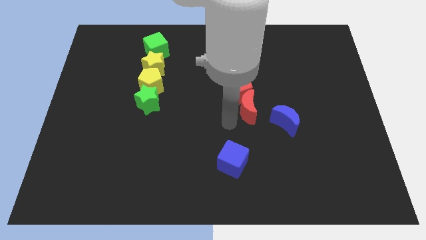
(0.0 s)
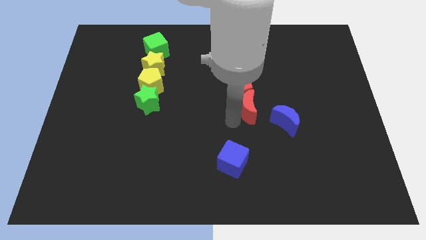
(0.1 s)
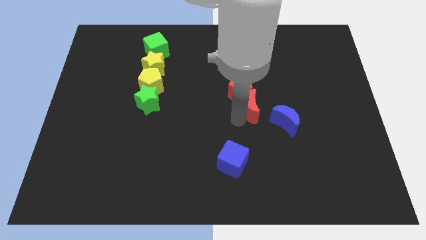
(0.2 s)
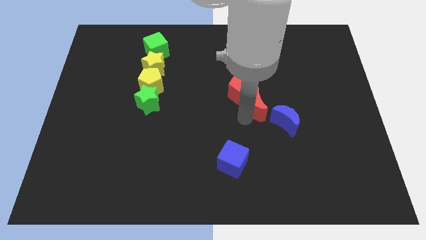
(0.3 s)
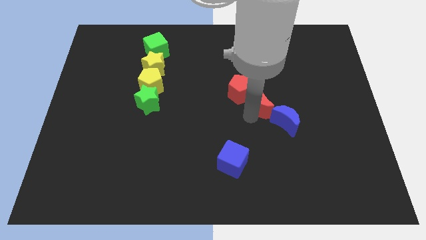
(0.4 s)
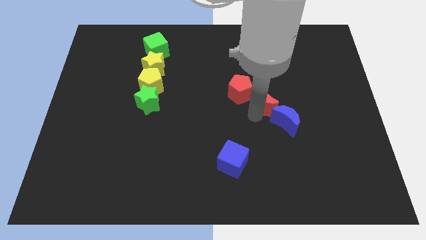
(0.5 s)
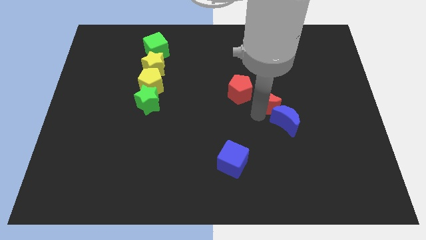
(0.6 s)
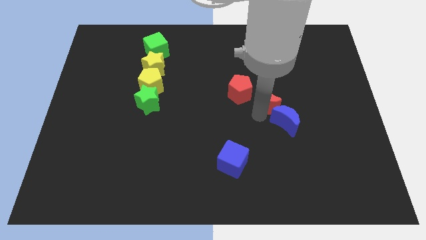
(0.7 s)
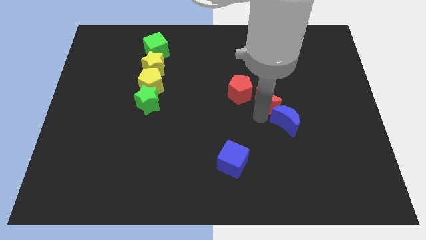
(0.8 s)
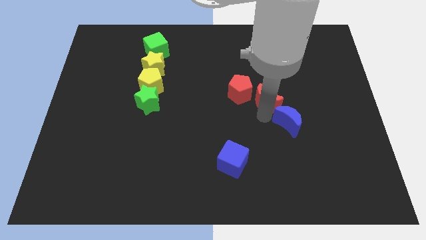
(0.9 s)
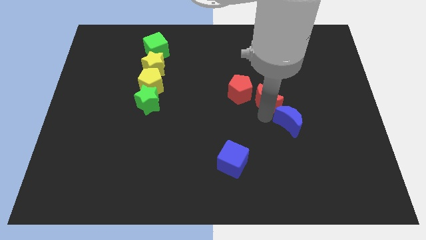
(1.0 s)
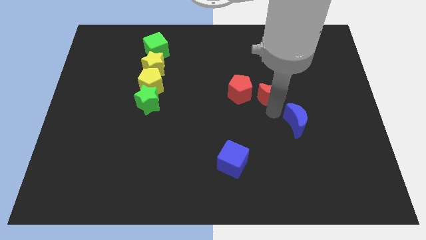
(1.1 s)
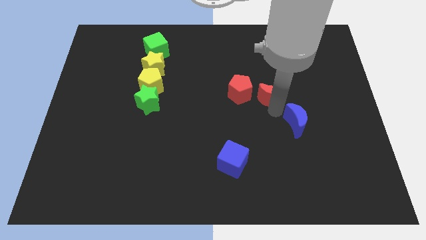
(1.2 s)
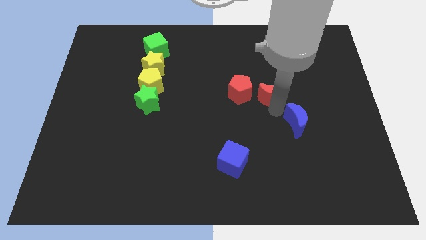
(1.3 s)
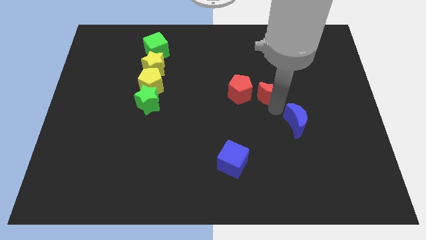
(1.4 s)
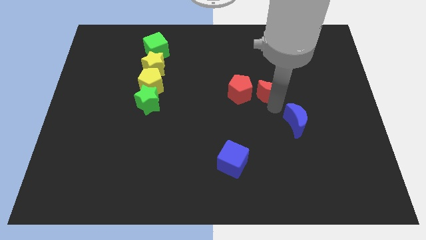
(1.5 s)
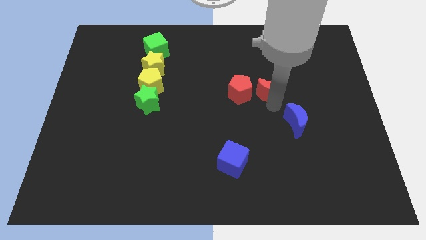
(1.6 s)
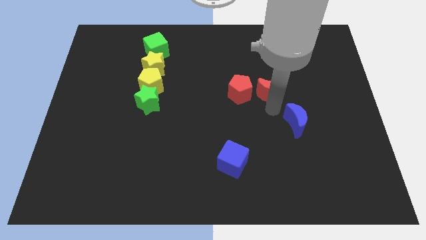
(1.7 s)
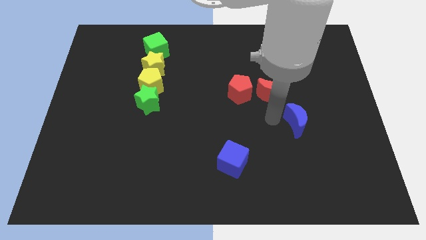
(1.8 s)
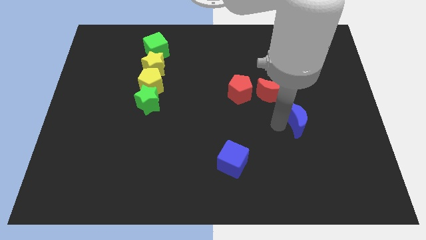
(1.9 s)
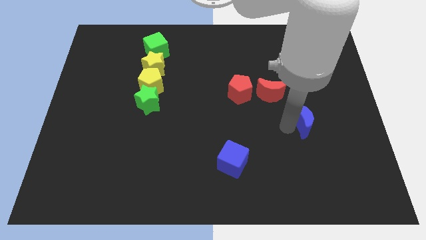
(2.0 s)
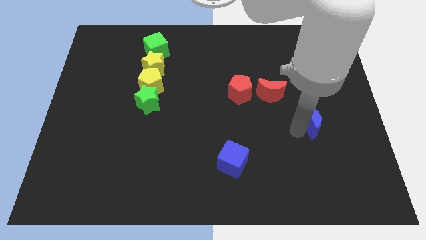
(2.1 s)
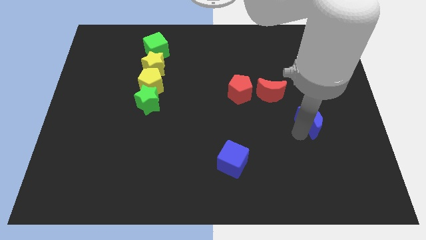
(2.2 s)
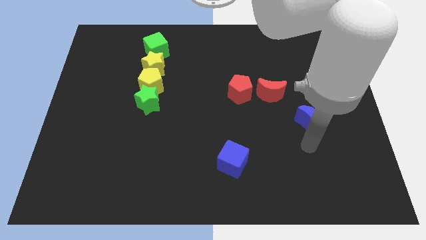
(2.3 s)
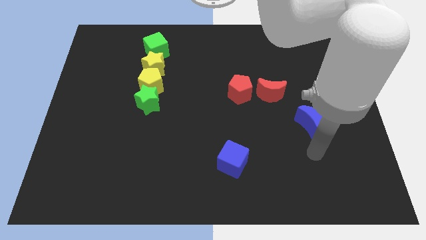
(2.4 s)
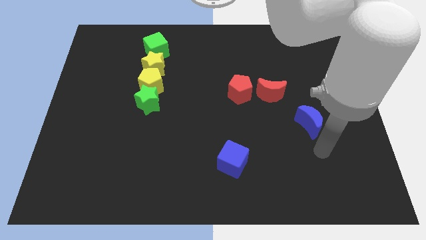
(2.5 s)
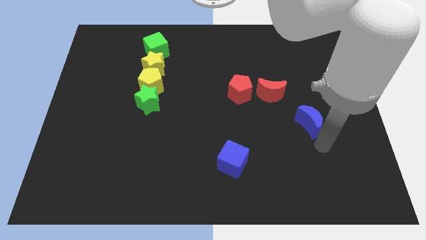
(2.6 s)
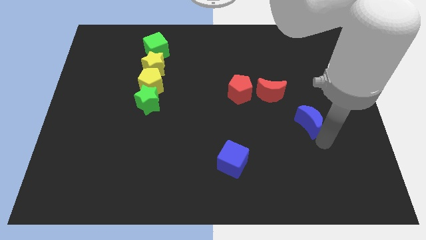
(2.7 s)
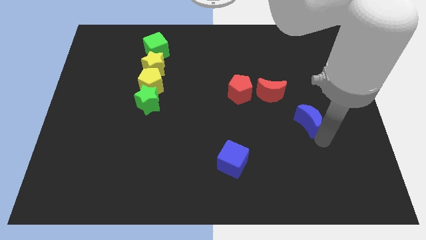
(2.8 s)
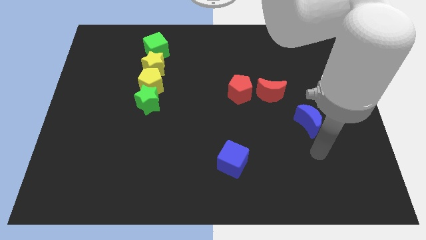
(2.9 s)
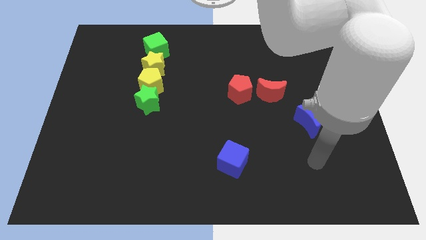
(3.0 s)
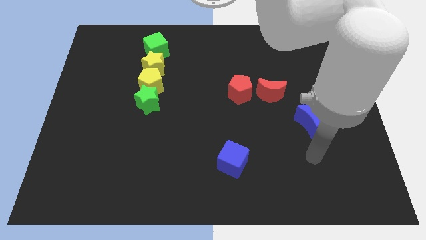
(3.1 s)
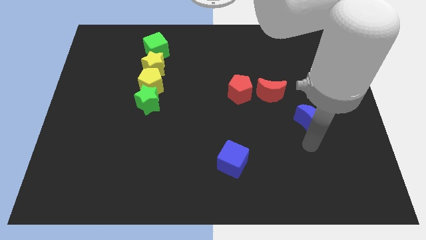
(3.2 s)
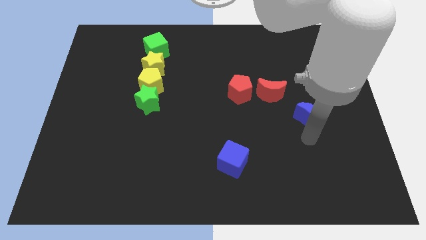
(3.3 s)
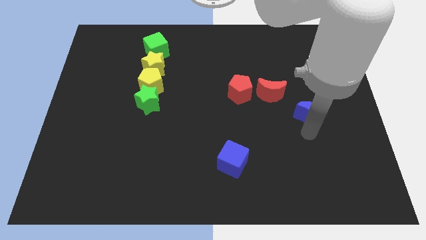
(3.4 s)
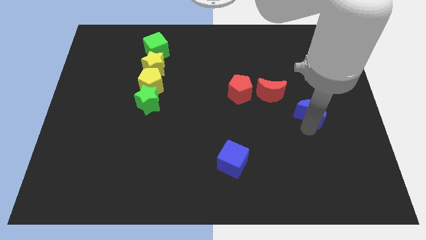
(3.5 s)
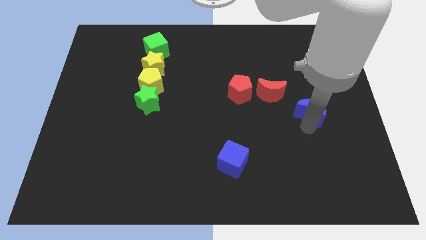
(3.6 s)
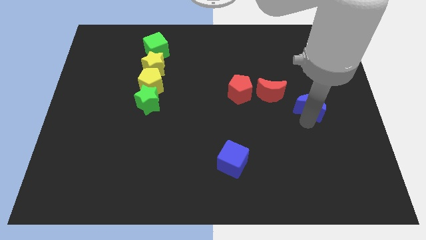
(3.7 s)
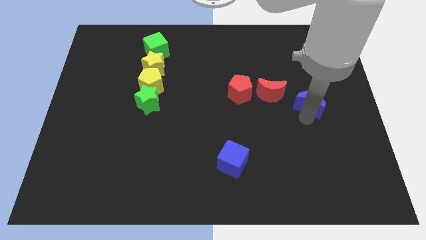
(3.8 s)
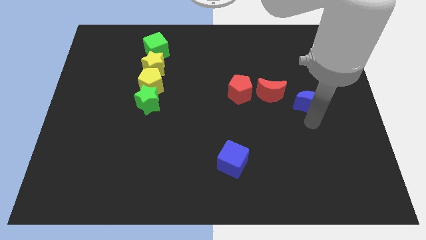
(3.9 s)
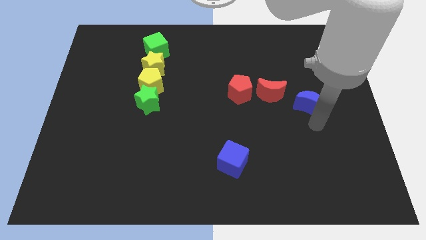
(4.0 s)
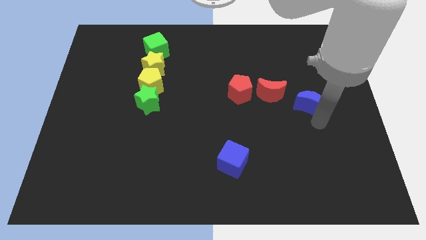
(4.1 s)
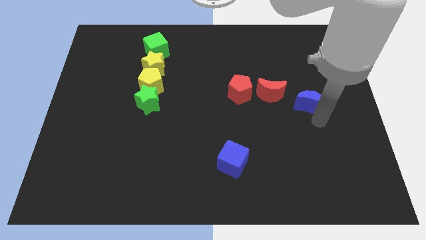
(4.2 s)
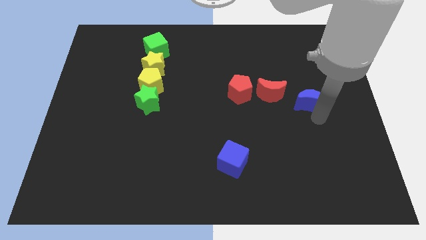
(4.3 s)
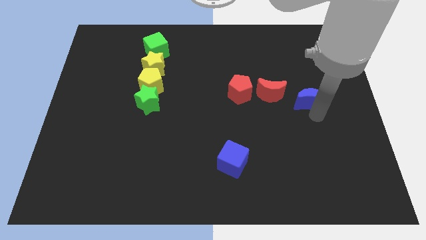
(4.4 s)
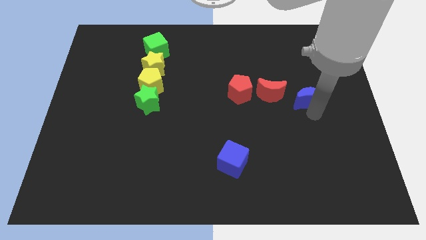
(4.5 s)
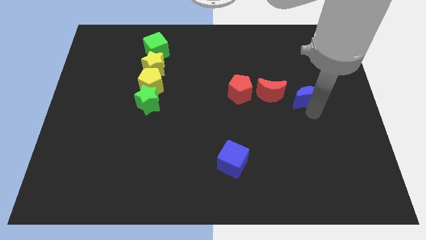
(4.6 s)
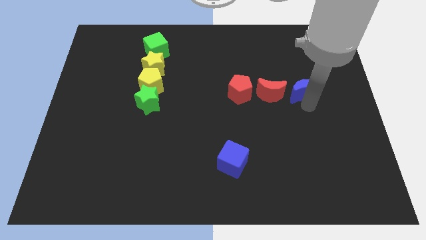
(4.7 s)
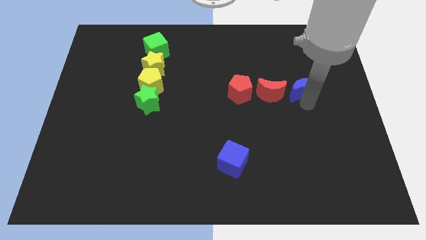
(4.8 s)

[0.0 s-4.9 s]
place red moon and blue moon horizontally to the right side of the red pentagon

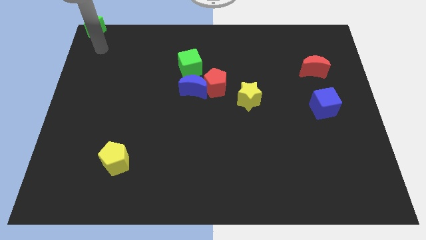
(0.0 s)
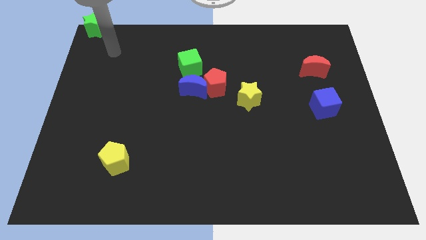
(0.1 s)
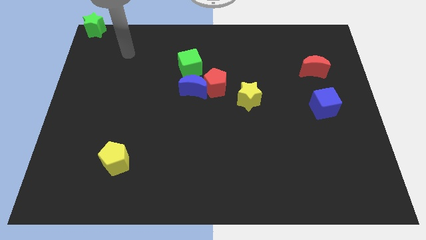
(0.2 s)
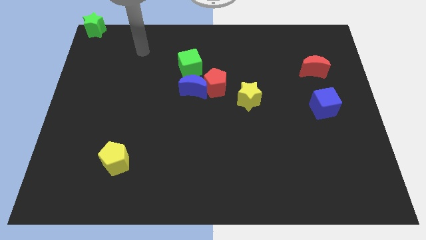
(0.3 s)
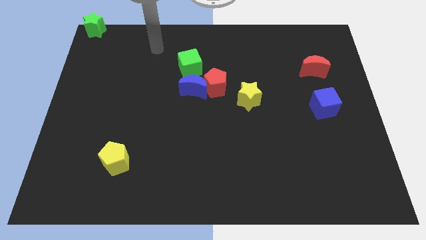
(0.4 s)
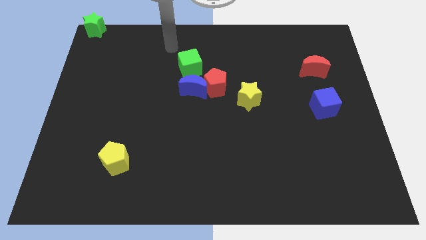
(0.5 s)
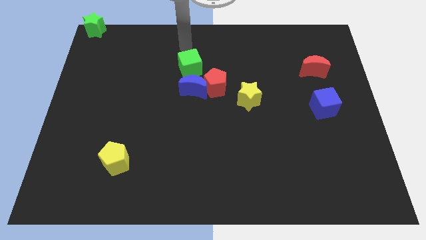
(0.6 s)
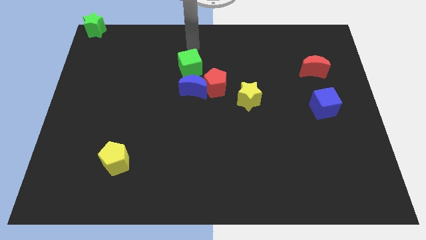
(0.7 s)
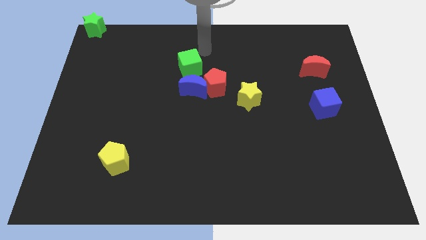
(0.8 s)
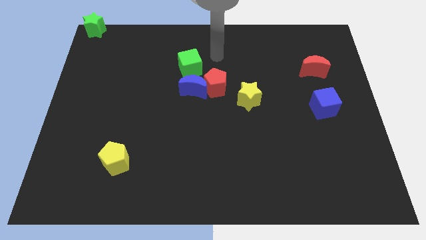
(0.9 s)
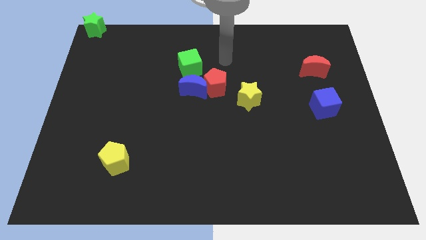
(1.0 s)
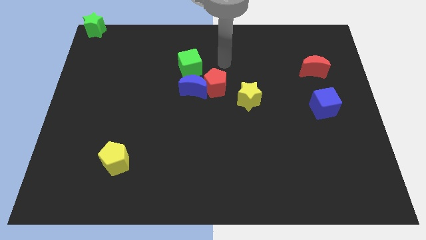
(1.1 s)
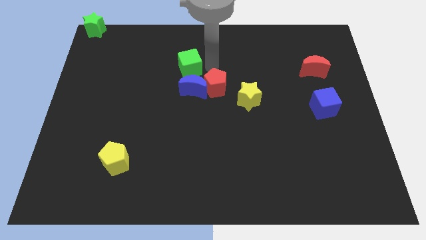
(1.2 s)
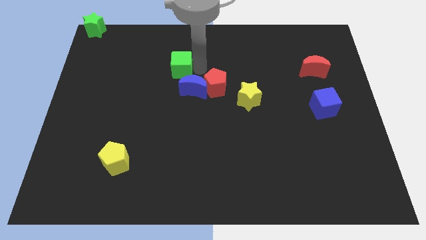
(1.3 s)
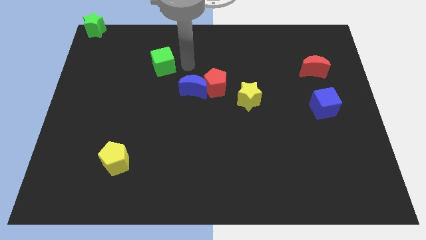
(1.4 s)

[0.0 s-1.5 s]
tap the green cube

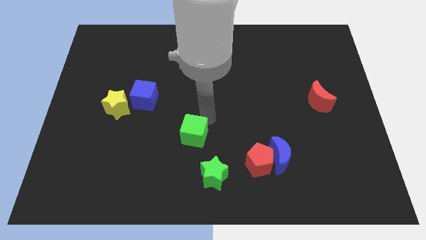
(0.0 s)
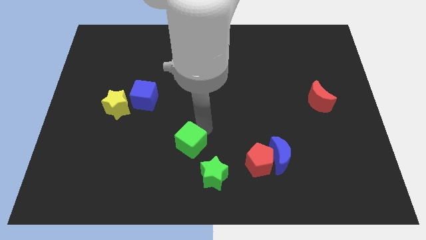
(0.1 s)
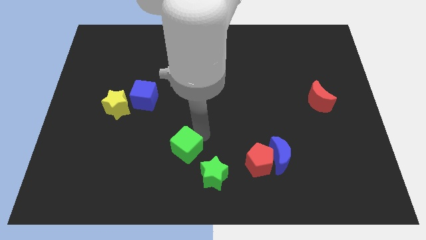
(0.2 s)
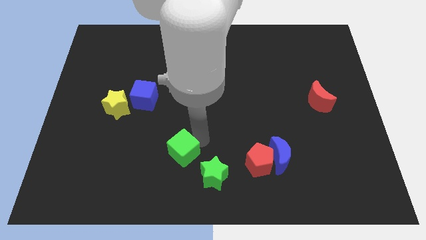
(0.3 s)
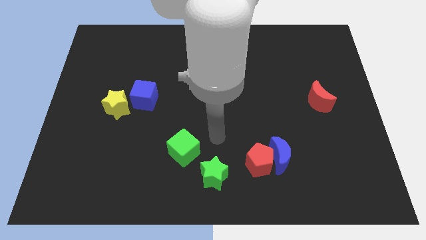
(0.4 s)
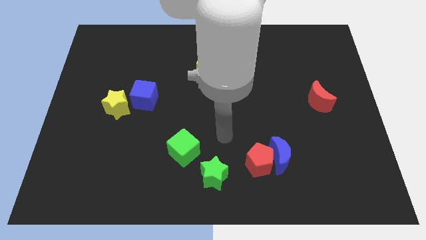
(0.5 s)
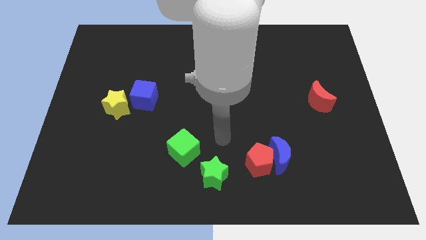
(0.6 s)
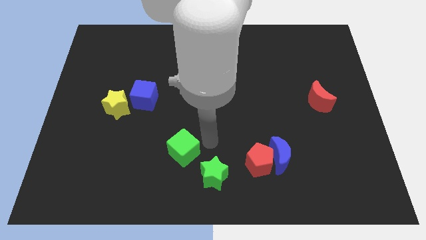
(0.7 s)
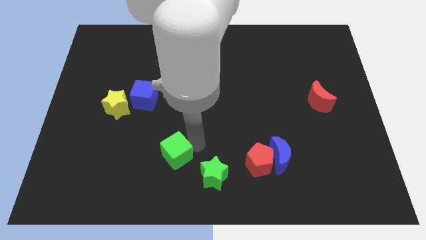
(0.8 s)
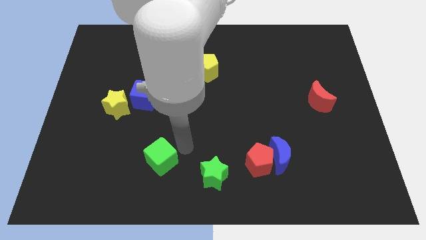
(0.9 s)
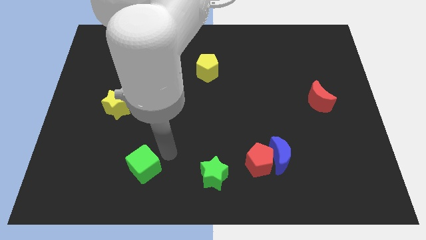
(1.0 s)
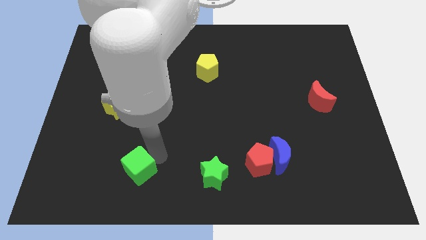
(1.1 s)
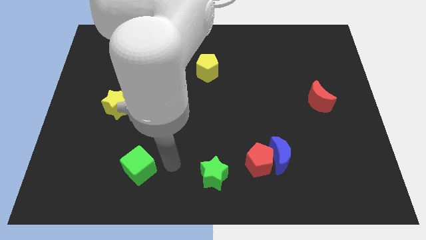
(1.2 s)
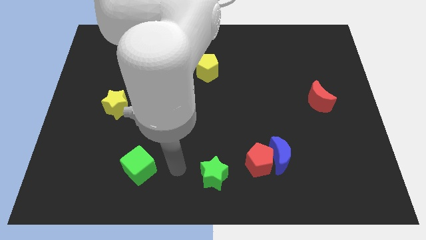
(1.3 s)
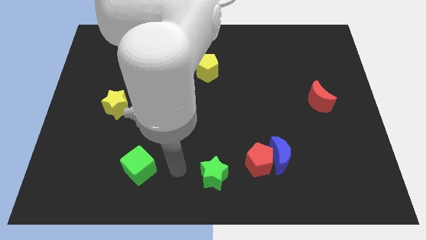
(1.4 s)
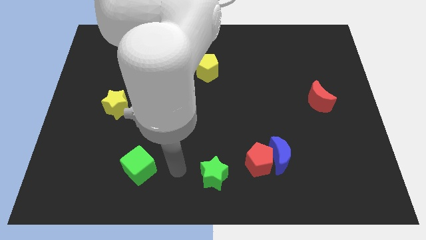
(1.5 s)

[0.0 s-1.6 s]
move green cube to the bottom of blue cube

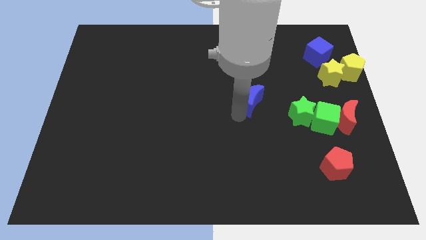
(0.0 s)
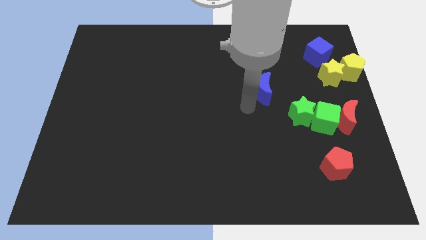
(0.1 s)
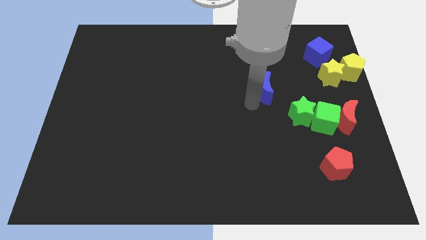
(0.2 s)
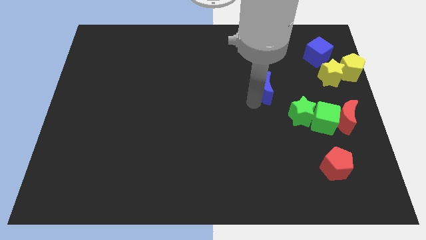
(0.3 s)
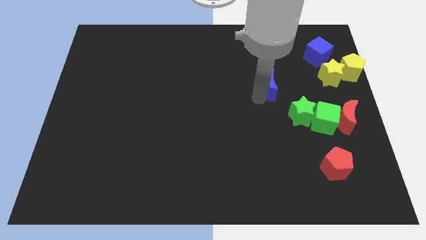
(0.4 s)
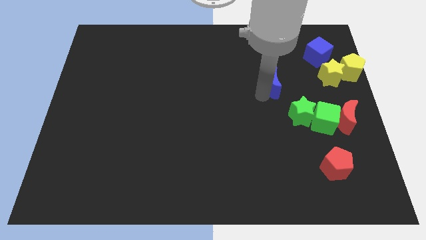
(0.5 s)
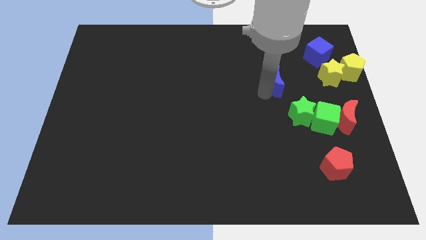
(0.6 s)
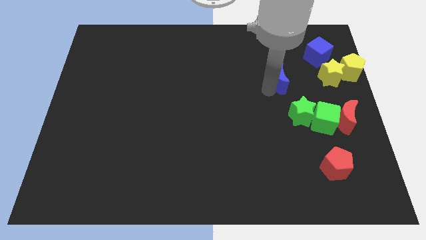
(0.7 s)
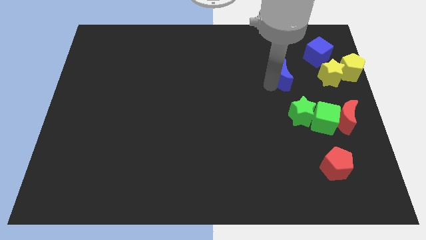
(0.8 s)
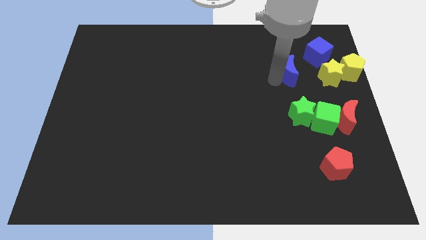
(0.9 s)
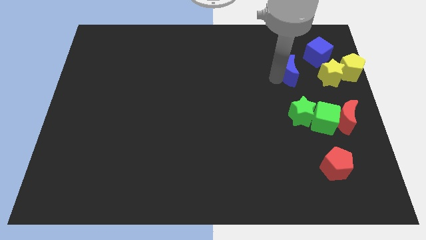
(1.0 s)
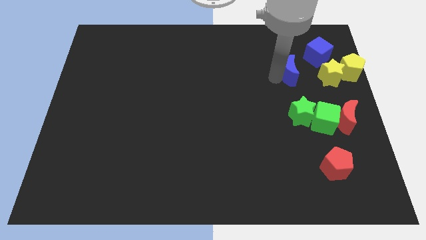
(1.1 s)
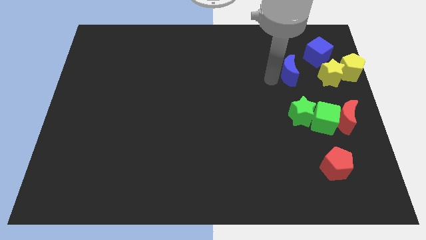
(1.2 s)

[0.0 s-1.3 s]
push the blue cube vertically to green star
